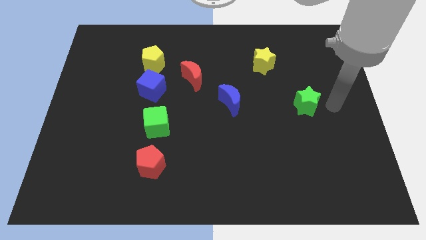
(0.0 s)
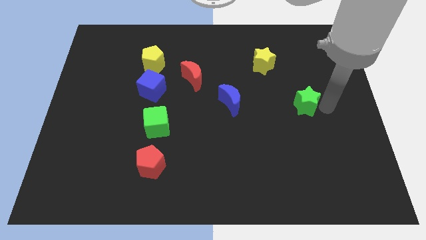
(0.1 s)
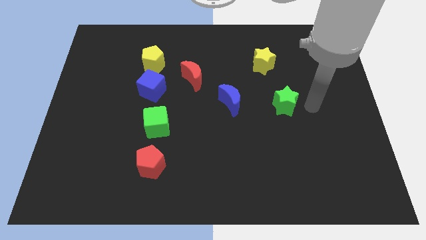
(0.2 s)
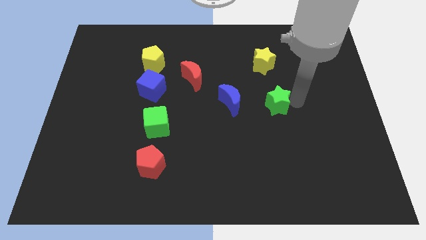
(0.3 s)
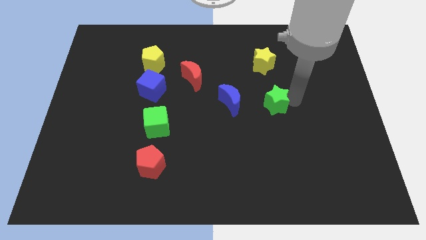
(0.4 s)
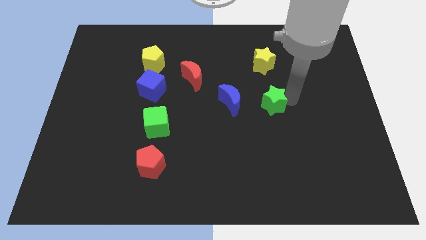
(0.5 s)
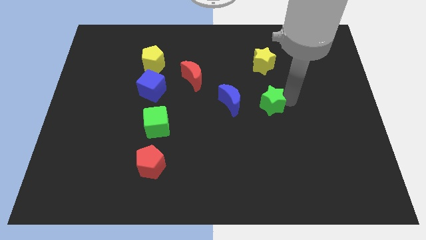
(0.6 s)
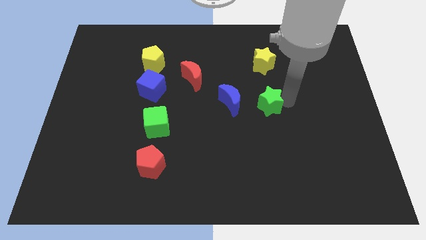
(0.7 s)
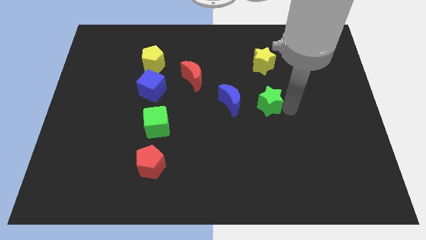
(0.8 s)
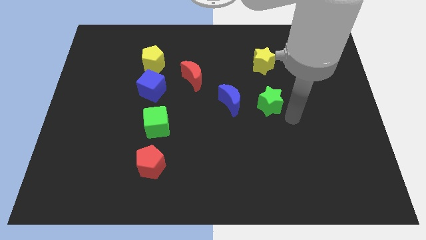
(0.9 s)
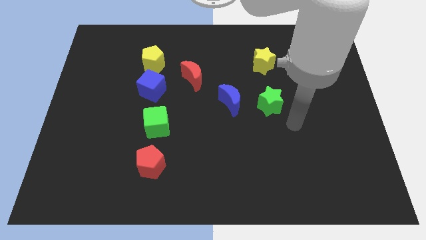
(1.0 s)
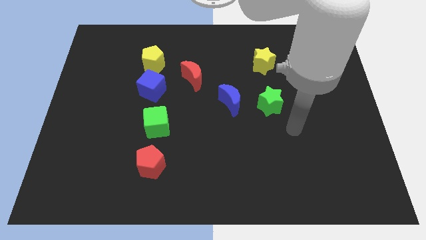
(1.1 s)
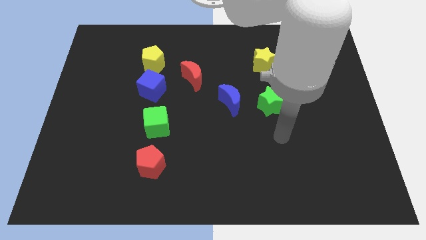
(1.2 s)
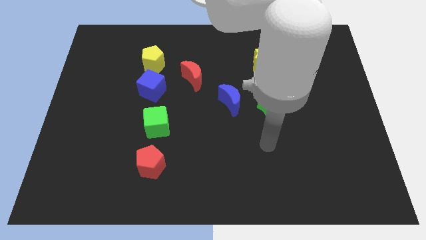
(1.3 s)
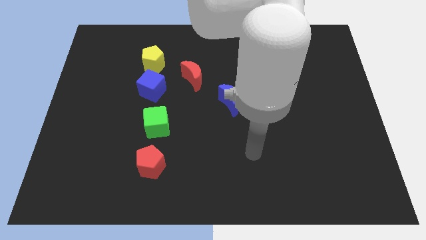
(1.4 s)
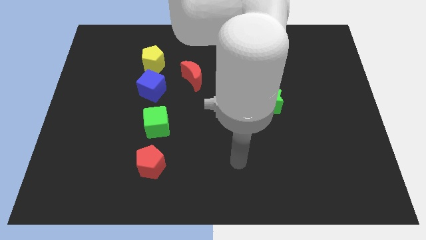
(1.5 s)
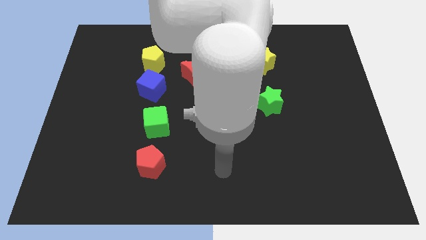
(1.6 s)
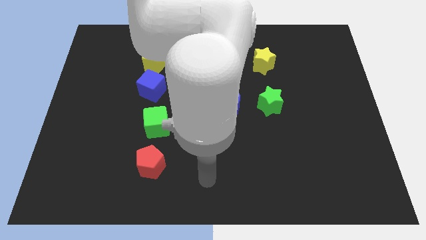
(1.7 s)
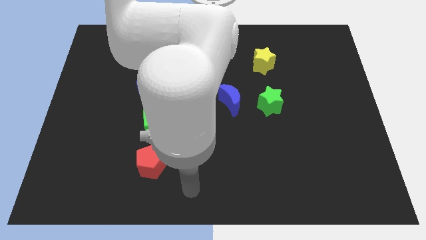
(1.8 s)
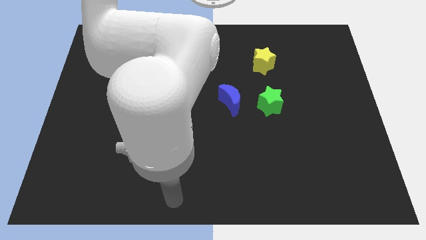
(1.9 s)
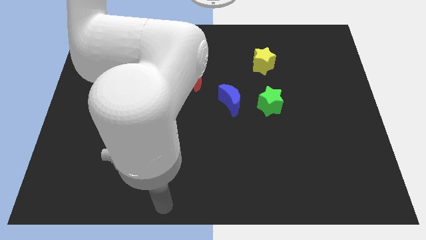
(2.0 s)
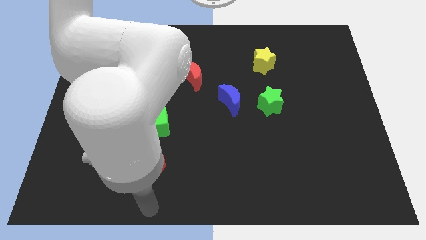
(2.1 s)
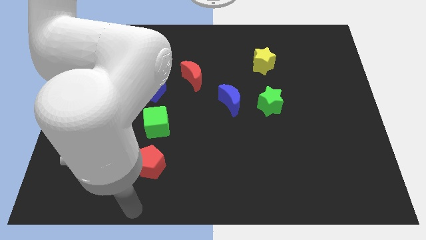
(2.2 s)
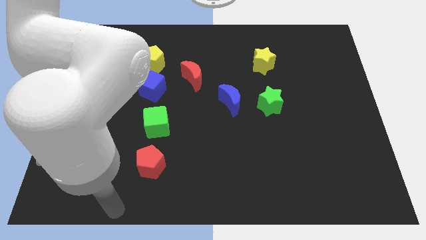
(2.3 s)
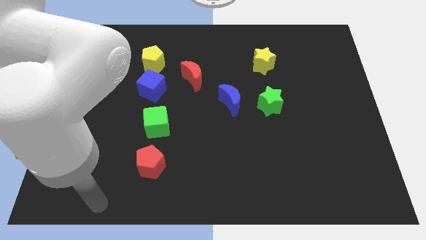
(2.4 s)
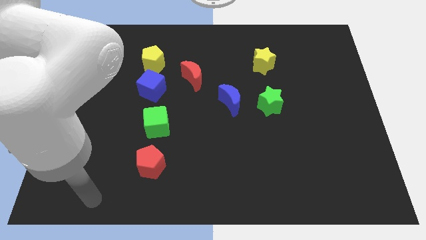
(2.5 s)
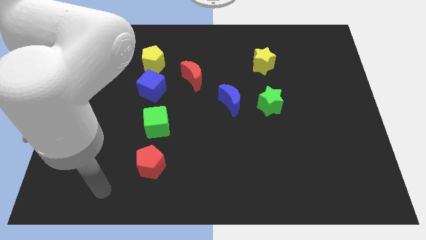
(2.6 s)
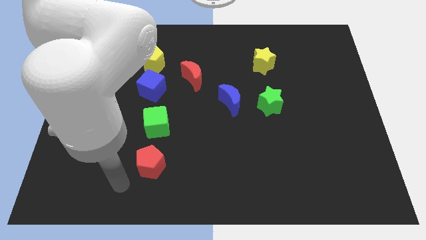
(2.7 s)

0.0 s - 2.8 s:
place the green star vertically below the yellow star

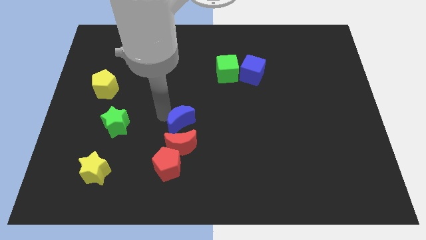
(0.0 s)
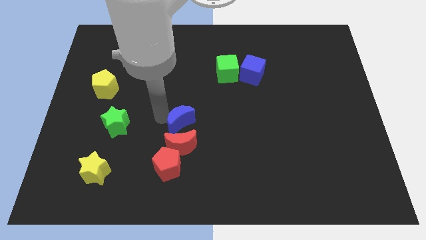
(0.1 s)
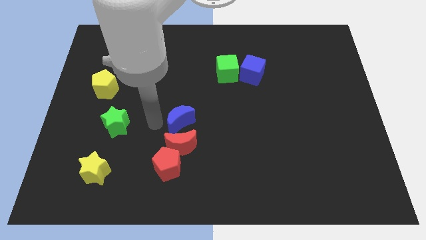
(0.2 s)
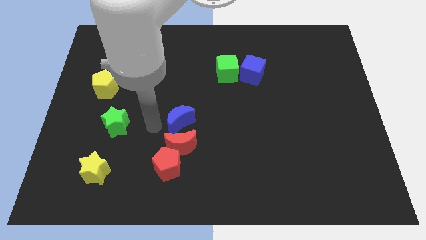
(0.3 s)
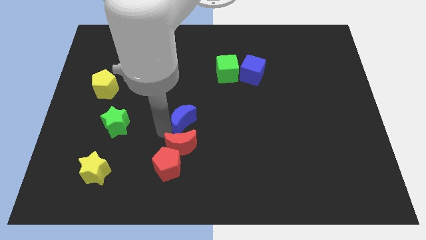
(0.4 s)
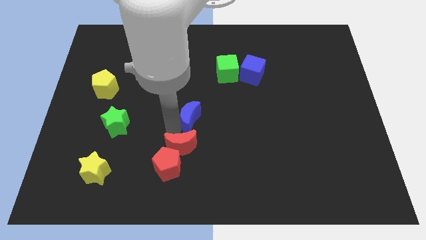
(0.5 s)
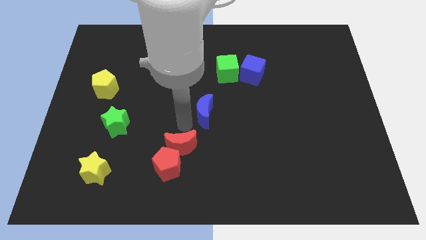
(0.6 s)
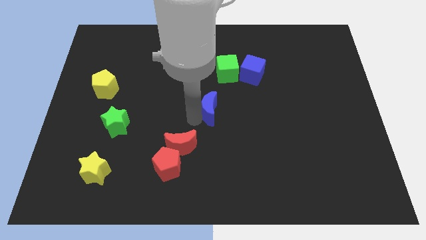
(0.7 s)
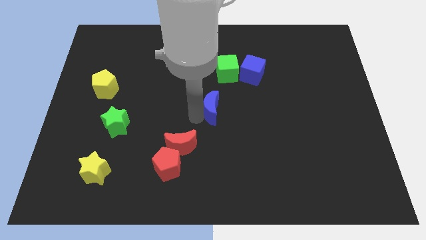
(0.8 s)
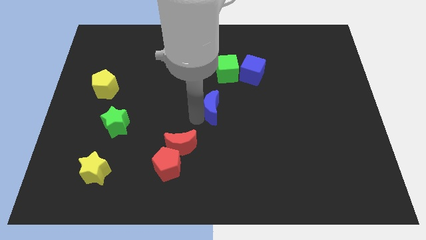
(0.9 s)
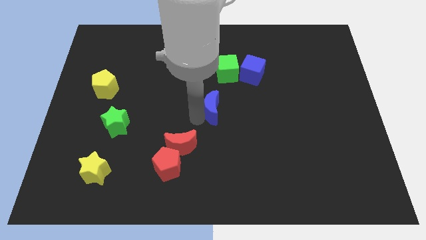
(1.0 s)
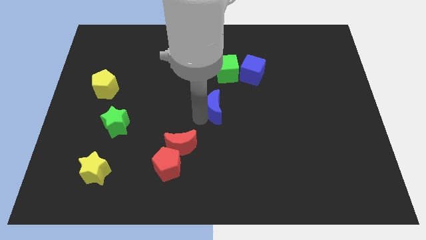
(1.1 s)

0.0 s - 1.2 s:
slide the blue moon diagonally top right to the red moon

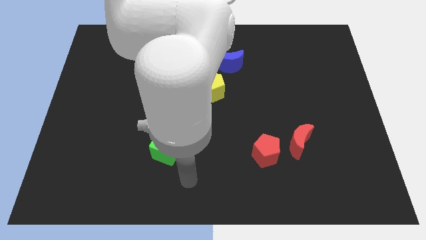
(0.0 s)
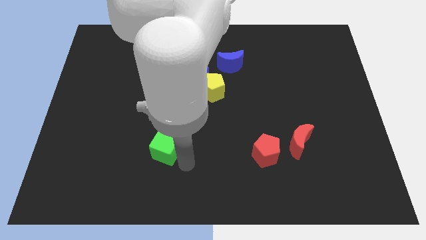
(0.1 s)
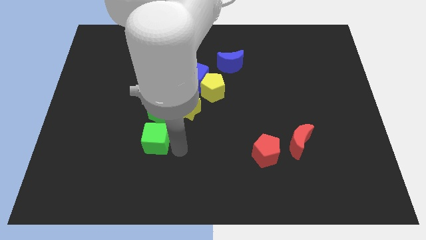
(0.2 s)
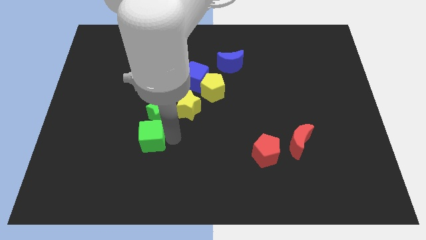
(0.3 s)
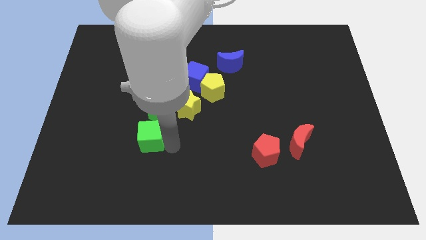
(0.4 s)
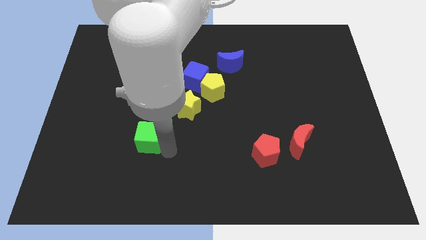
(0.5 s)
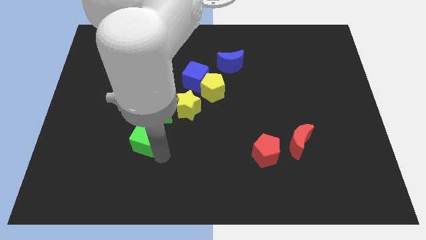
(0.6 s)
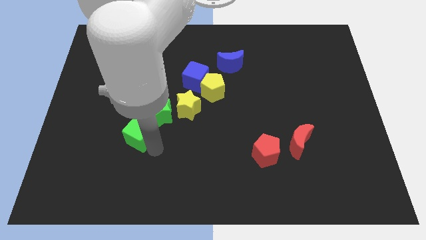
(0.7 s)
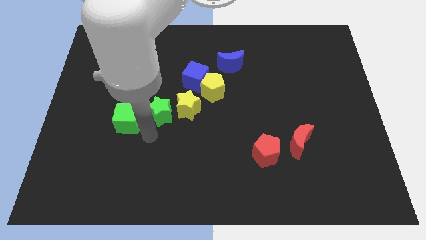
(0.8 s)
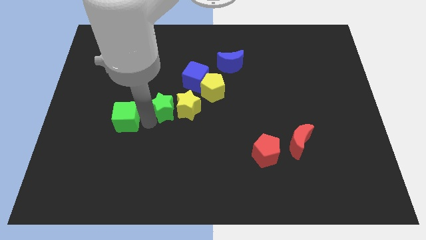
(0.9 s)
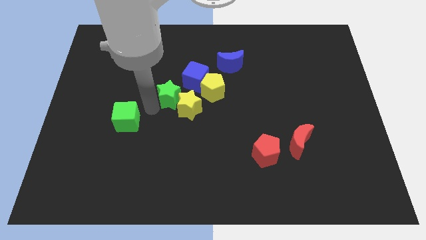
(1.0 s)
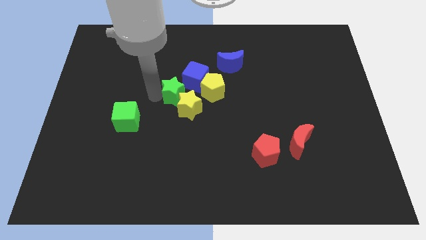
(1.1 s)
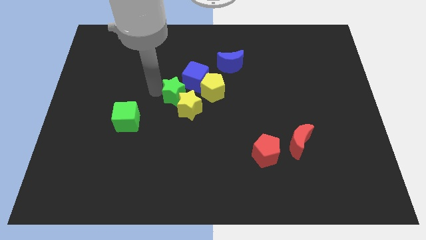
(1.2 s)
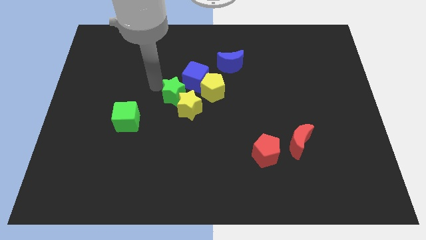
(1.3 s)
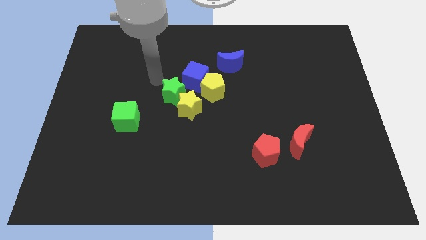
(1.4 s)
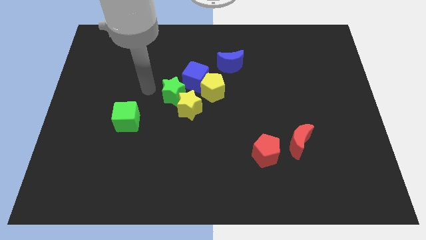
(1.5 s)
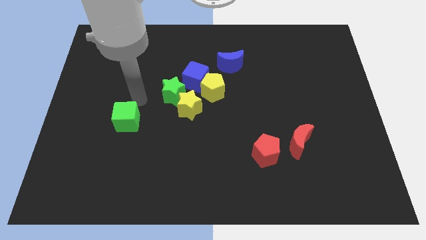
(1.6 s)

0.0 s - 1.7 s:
separate the green blocks from each other at the center

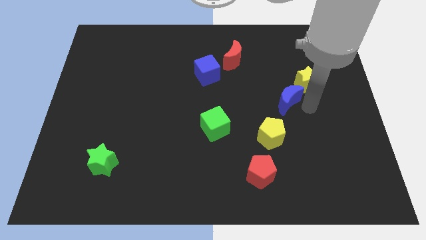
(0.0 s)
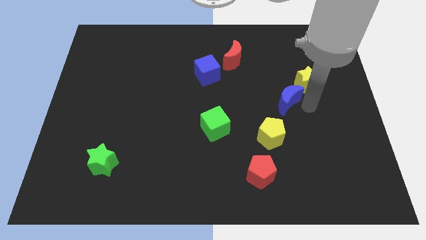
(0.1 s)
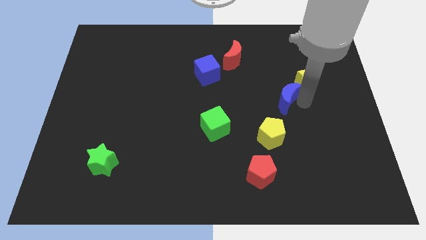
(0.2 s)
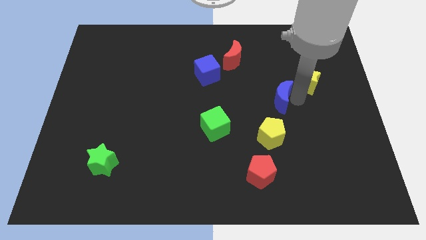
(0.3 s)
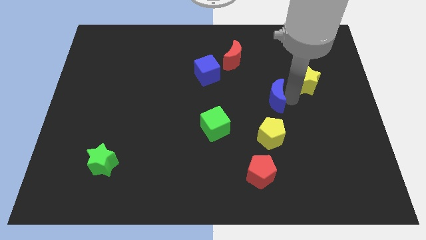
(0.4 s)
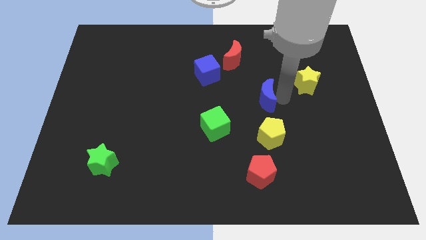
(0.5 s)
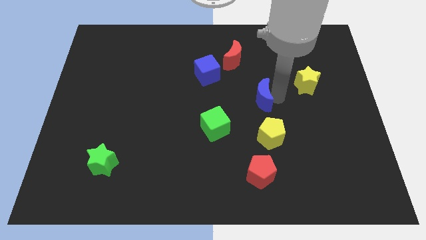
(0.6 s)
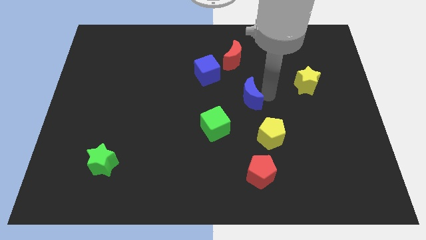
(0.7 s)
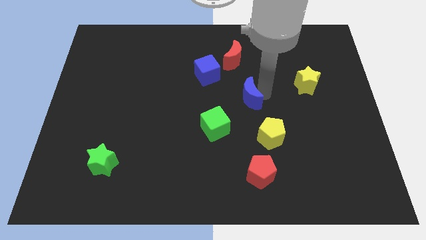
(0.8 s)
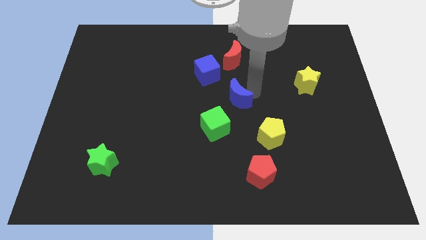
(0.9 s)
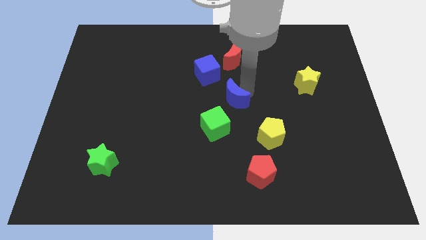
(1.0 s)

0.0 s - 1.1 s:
separate blue moon from yellow star

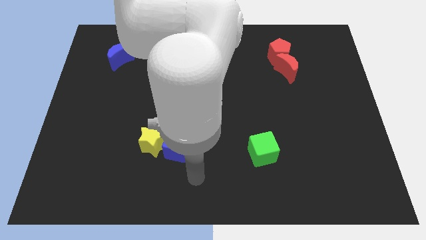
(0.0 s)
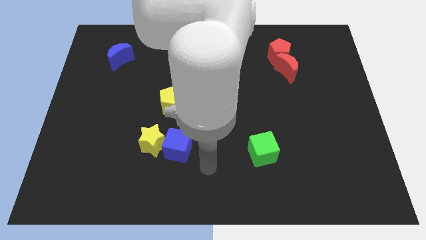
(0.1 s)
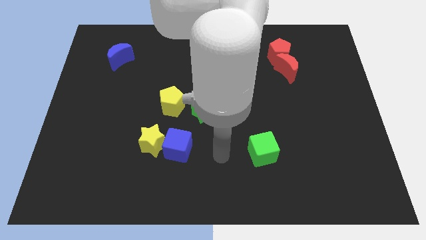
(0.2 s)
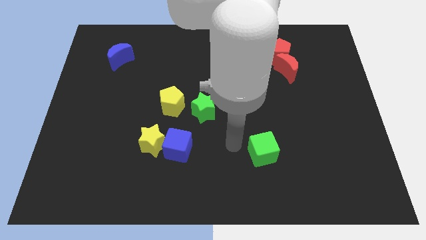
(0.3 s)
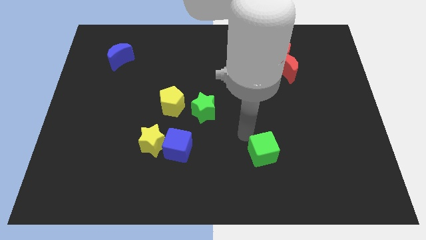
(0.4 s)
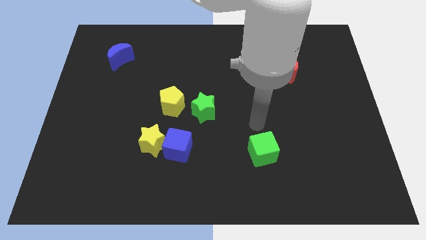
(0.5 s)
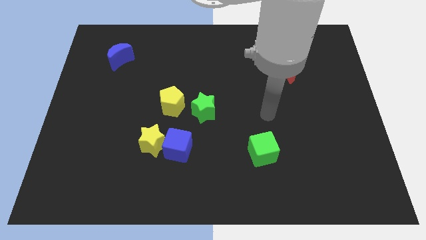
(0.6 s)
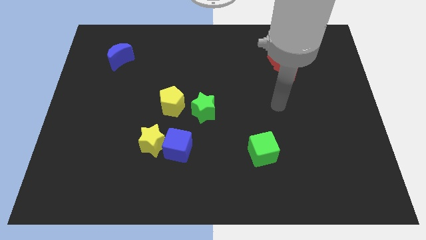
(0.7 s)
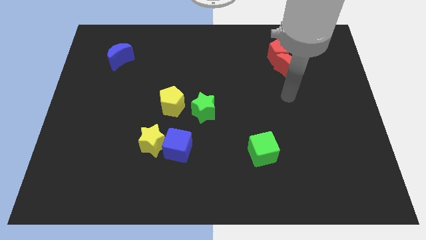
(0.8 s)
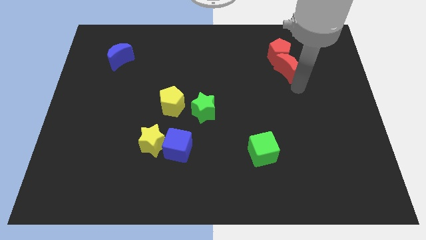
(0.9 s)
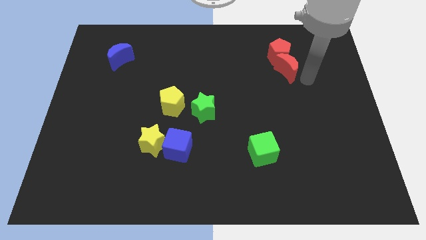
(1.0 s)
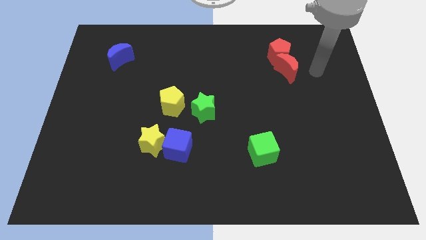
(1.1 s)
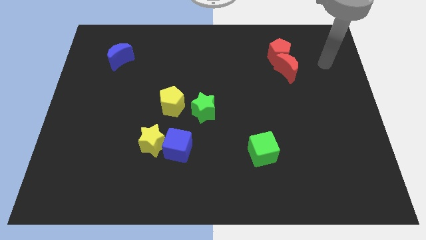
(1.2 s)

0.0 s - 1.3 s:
point your arm at the right of the red crescent

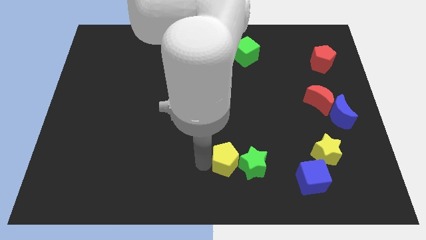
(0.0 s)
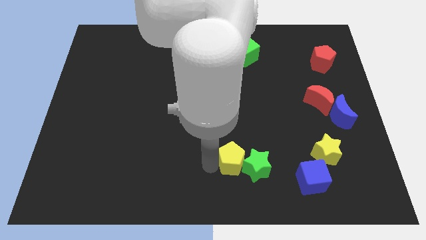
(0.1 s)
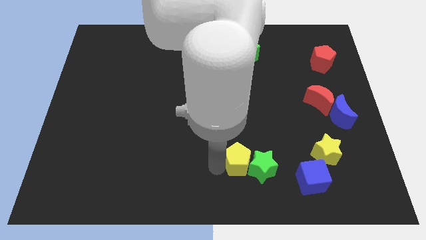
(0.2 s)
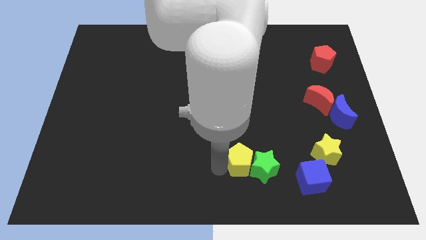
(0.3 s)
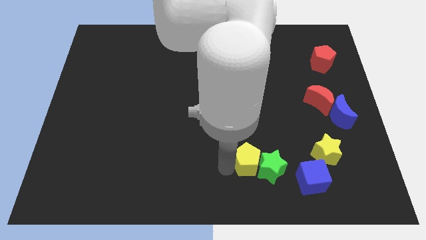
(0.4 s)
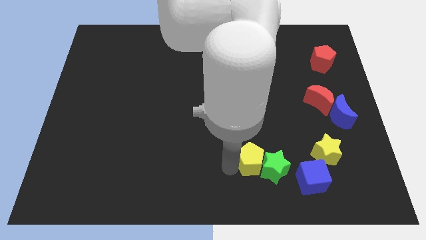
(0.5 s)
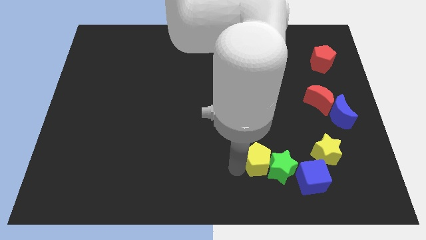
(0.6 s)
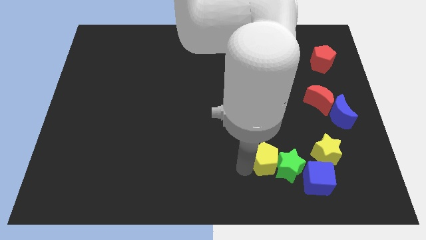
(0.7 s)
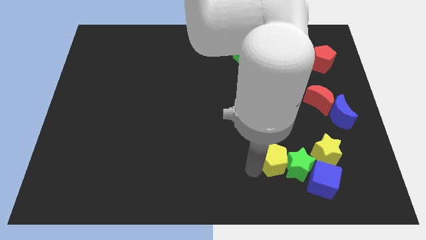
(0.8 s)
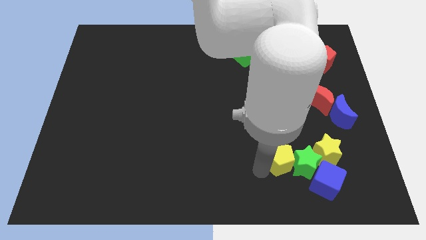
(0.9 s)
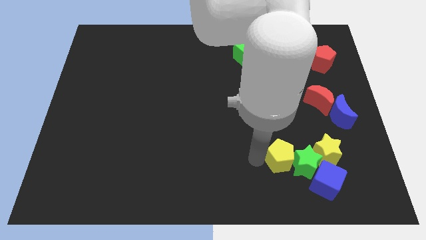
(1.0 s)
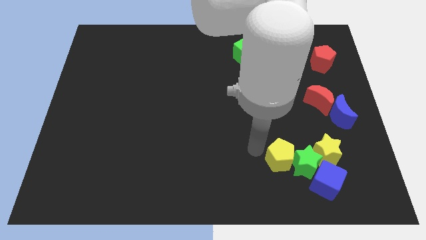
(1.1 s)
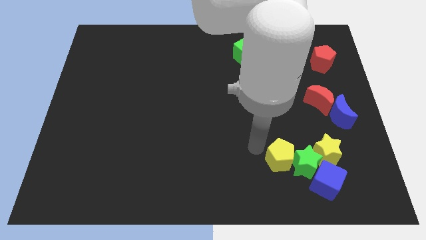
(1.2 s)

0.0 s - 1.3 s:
move the yellow pentagon and the green star into the yellow star
